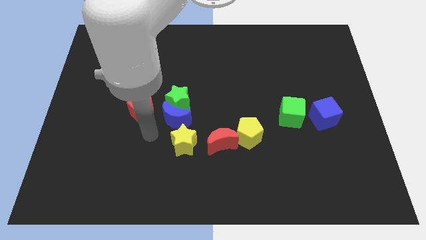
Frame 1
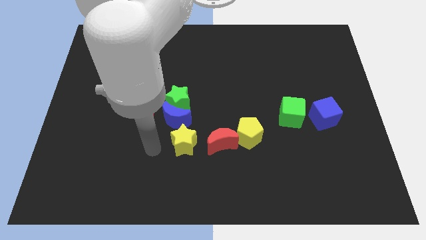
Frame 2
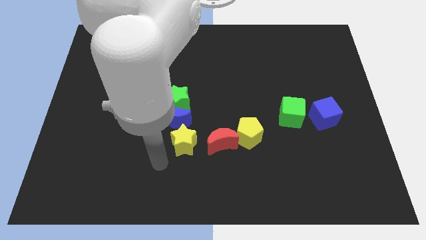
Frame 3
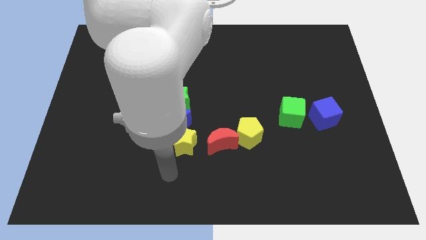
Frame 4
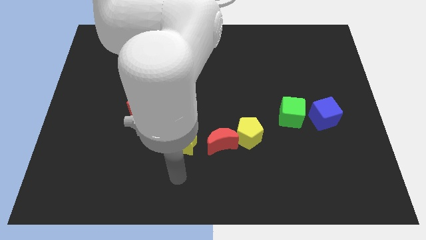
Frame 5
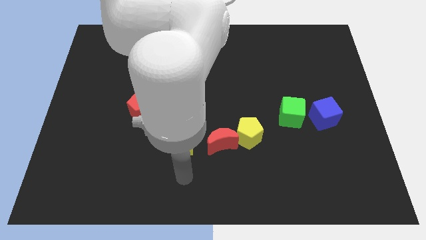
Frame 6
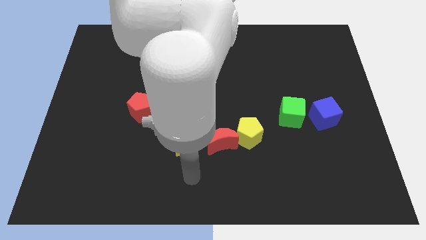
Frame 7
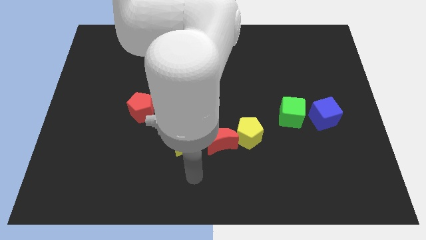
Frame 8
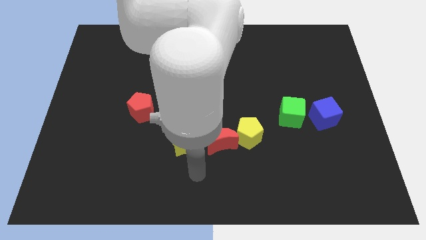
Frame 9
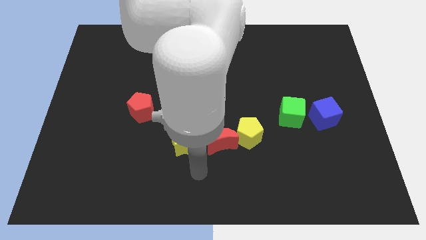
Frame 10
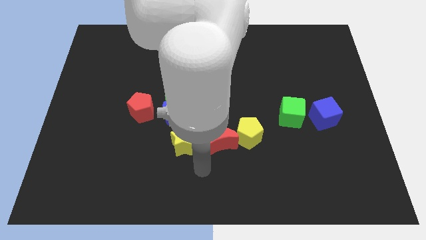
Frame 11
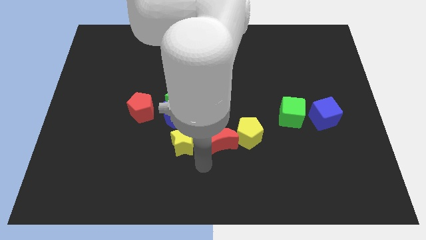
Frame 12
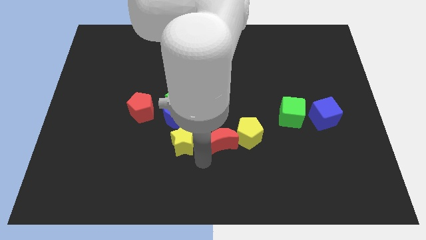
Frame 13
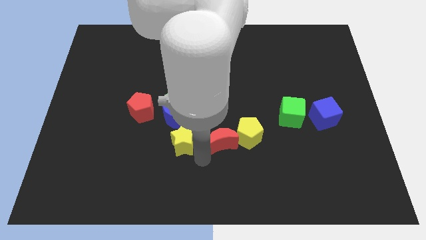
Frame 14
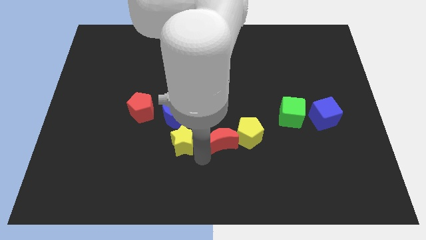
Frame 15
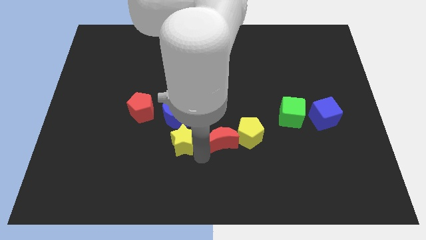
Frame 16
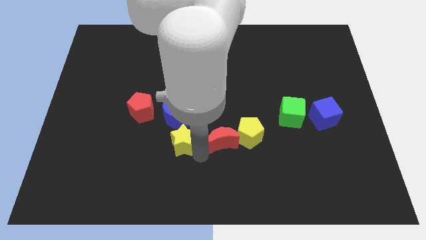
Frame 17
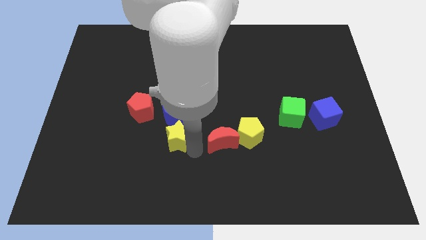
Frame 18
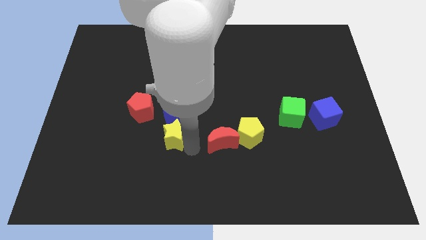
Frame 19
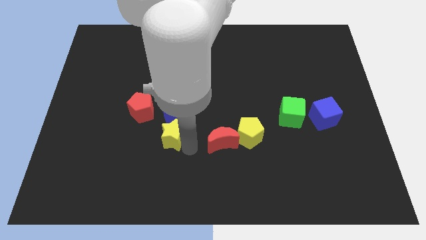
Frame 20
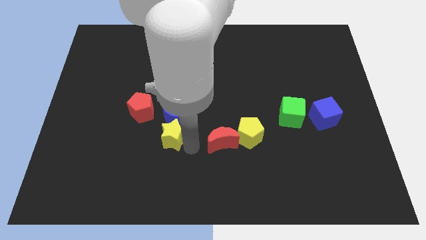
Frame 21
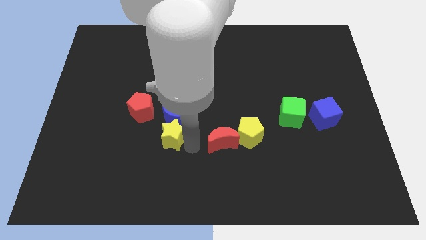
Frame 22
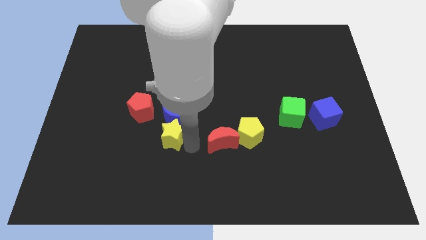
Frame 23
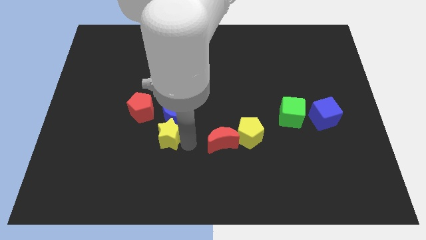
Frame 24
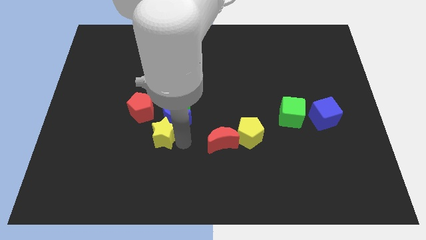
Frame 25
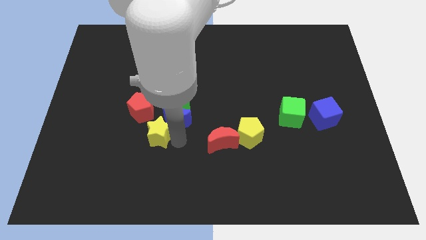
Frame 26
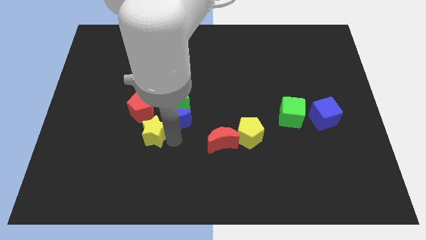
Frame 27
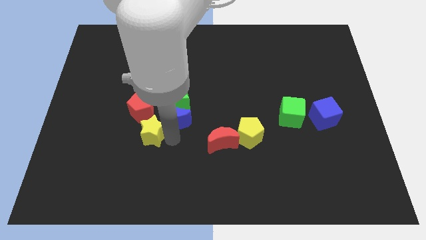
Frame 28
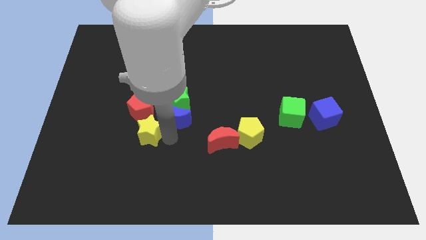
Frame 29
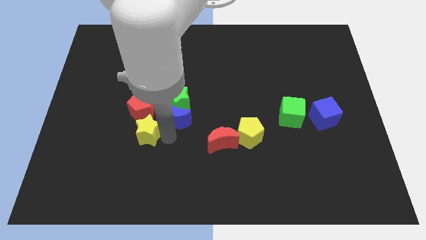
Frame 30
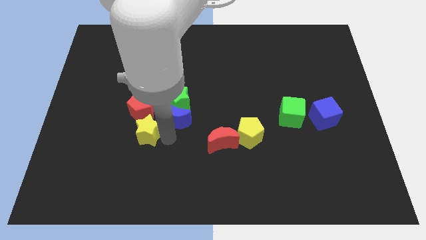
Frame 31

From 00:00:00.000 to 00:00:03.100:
push the yellow star to the bottom of the red pentagon

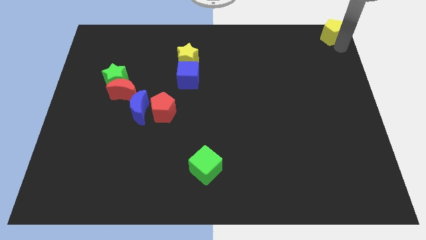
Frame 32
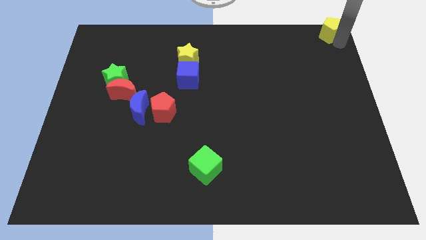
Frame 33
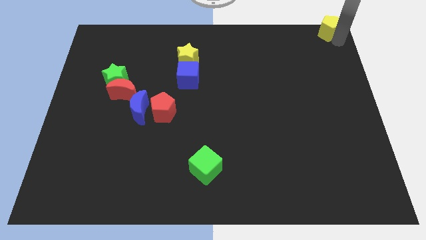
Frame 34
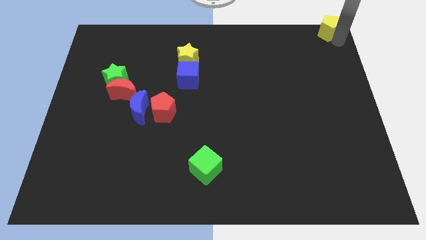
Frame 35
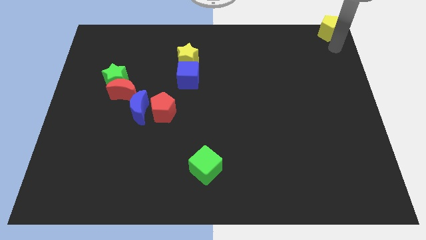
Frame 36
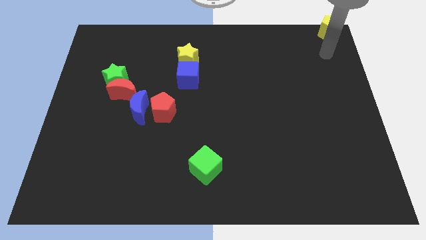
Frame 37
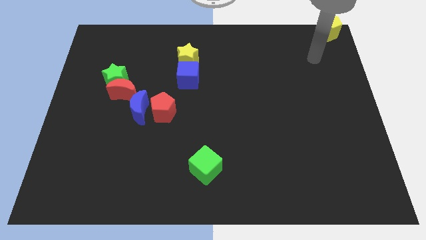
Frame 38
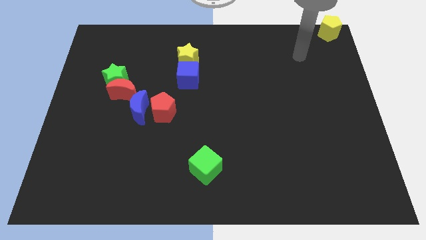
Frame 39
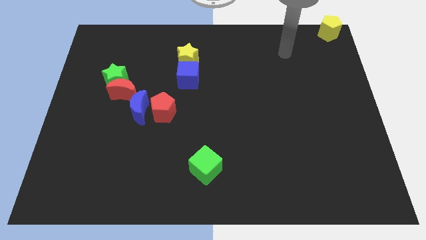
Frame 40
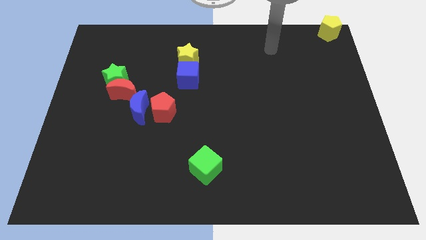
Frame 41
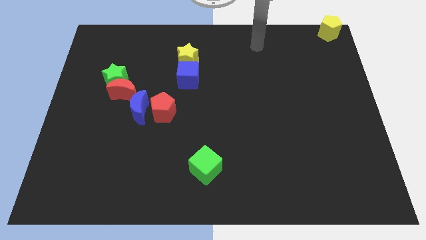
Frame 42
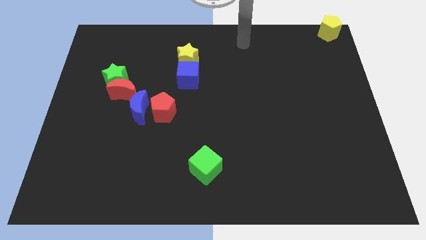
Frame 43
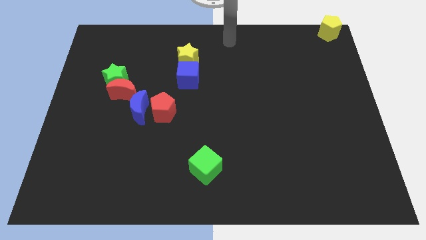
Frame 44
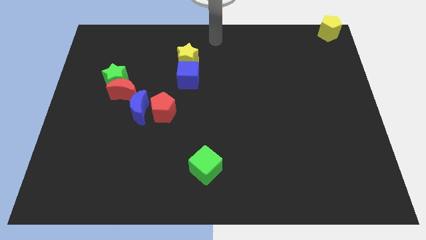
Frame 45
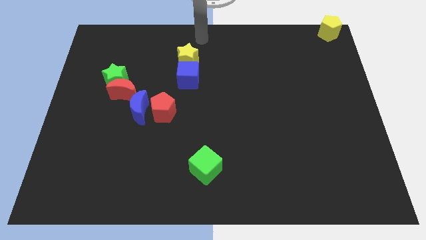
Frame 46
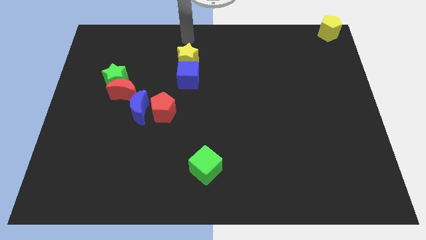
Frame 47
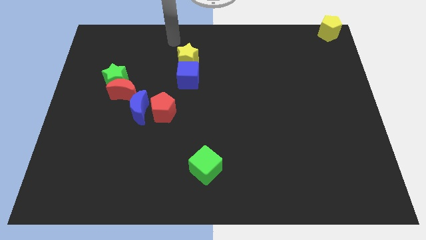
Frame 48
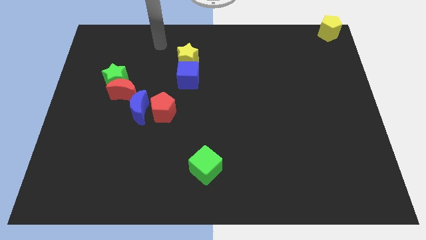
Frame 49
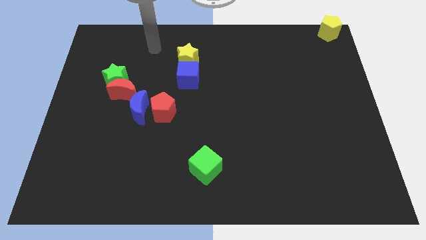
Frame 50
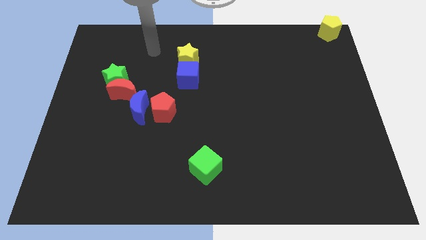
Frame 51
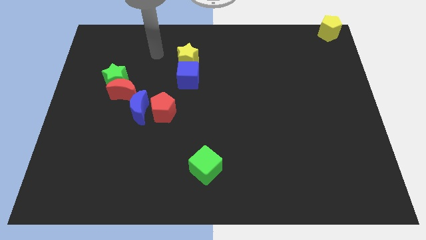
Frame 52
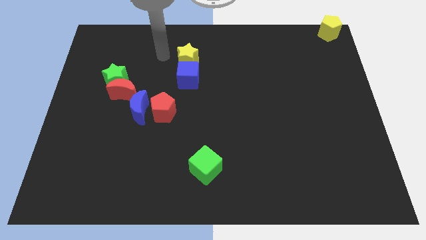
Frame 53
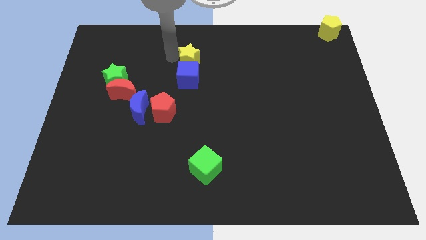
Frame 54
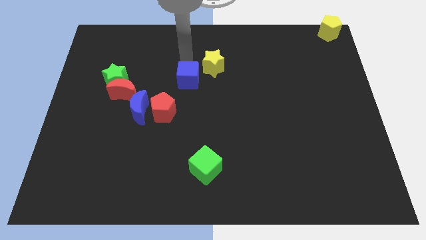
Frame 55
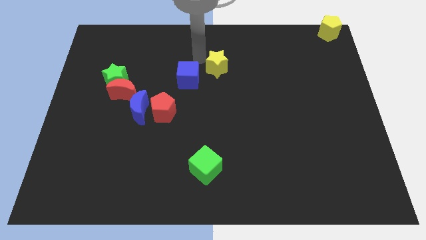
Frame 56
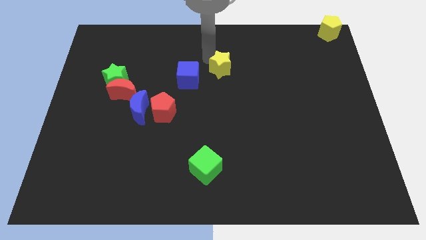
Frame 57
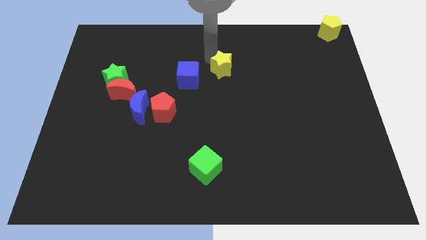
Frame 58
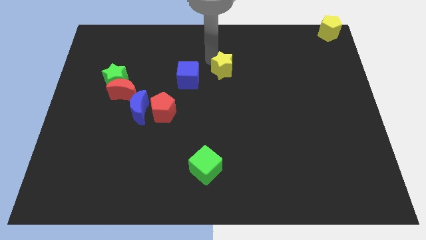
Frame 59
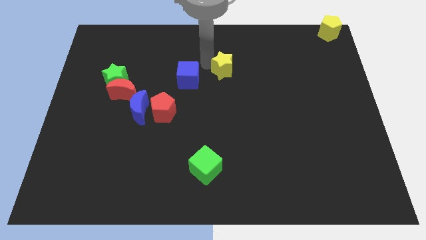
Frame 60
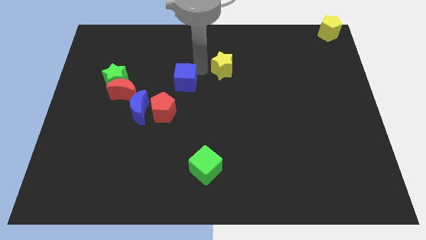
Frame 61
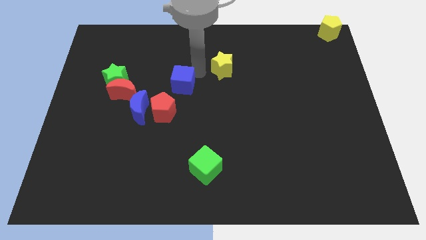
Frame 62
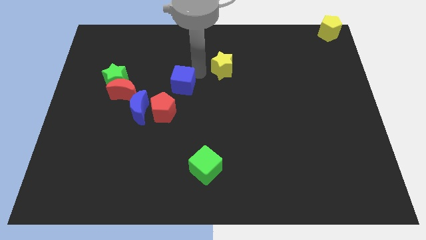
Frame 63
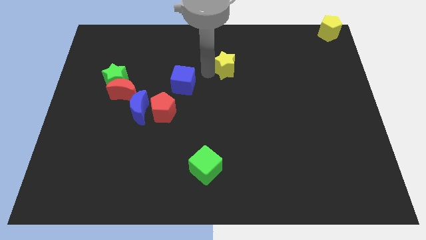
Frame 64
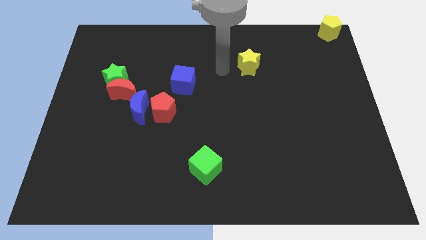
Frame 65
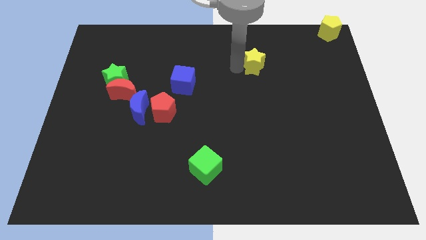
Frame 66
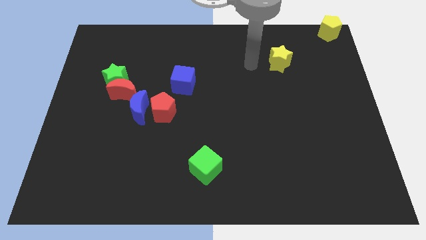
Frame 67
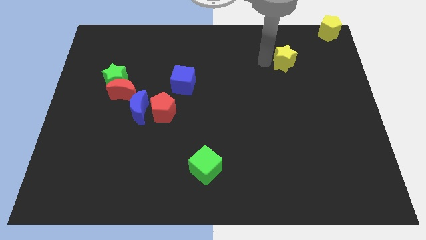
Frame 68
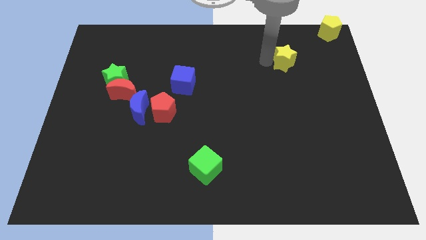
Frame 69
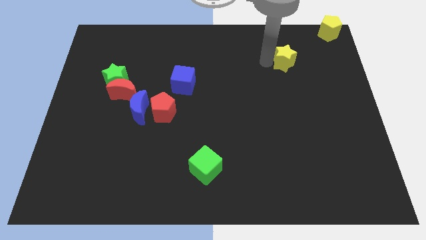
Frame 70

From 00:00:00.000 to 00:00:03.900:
place the yellow star diagonally to the bottom left to the yellow pentagon

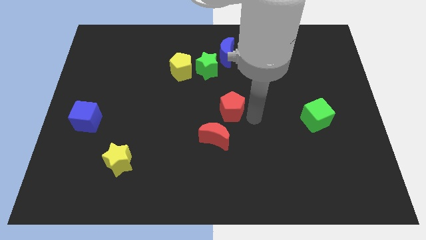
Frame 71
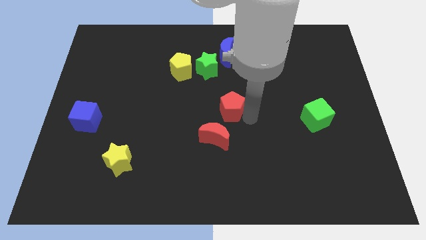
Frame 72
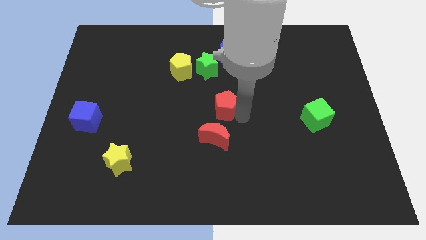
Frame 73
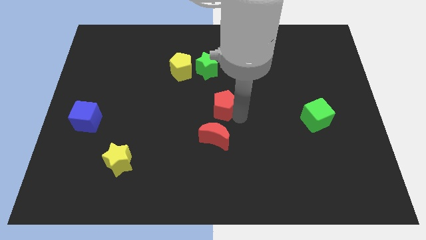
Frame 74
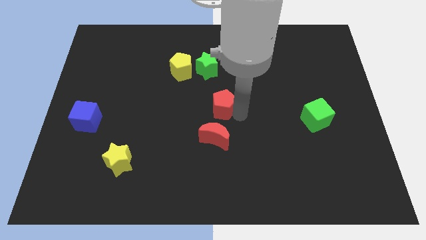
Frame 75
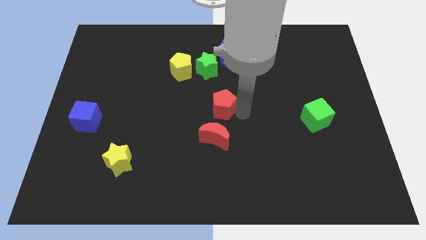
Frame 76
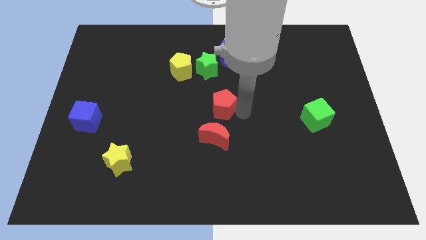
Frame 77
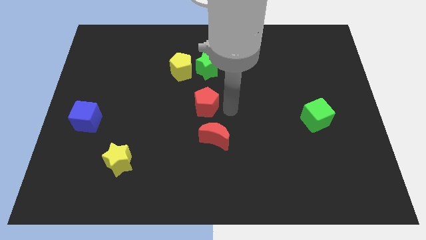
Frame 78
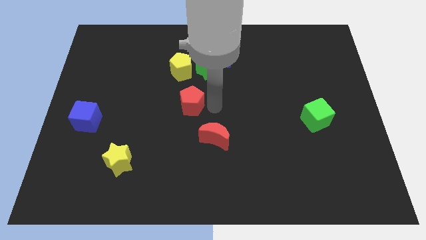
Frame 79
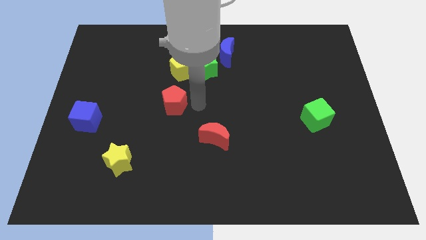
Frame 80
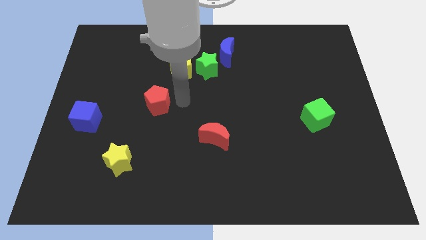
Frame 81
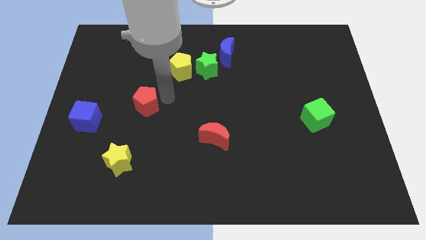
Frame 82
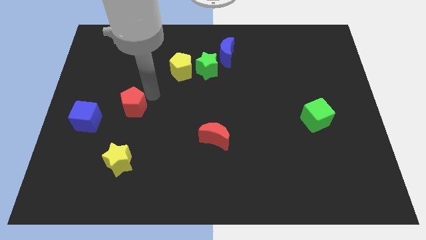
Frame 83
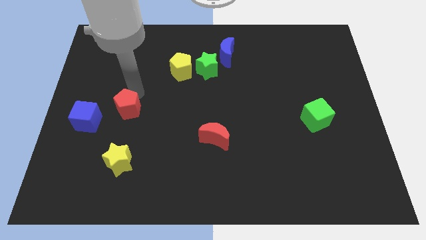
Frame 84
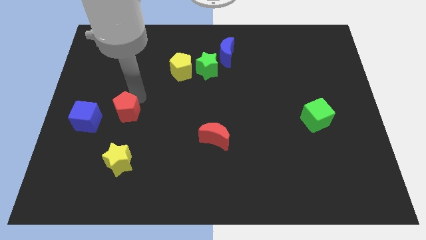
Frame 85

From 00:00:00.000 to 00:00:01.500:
push the red pentagon to the top side of the yellow star

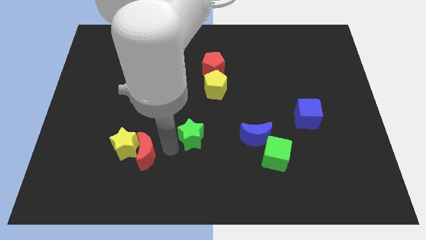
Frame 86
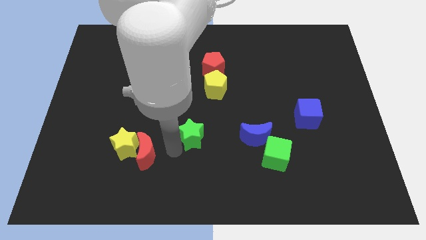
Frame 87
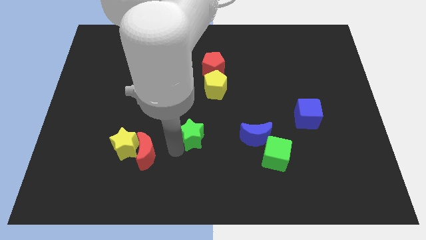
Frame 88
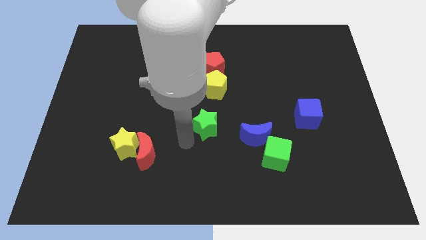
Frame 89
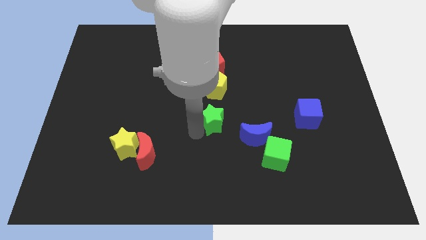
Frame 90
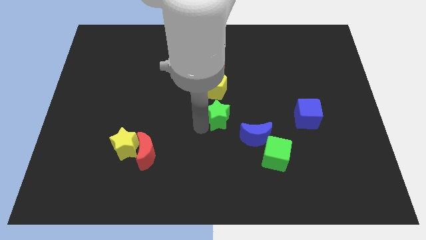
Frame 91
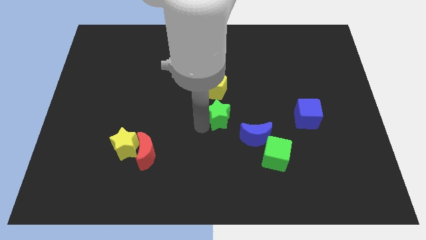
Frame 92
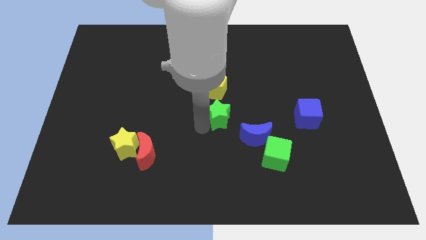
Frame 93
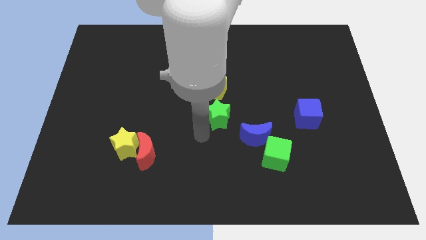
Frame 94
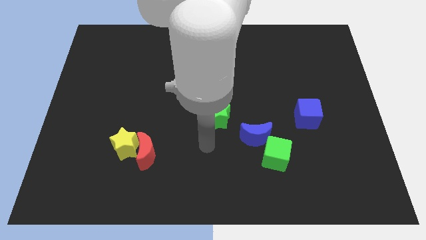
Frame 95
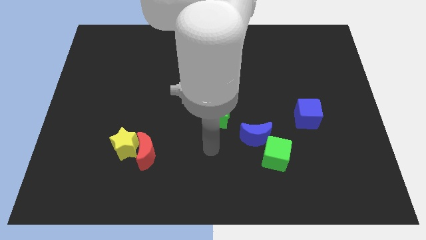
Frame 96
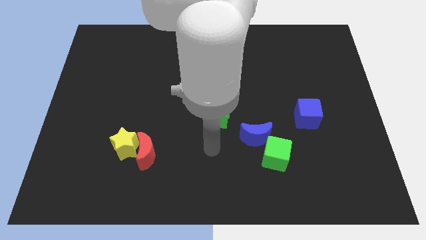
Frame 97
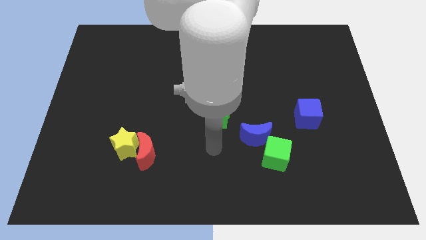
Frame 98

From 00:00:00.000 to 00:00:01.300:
place the green star vertically below the yellow pentagon
